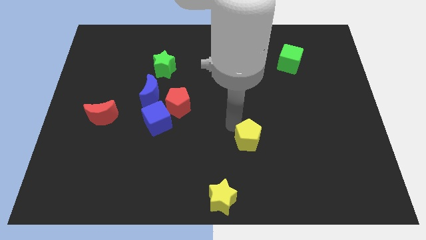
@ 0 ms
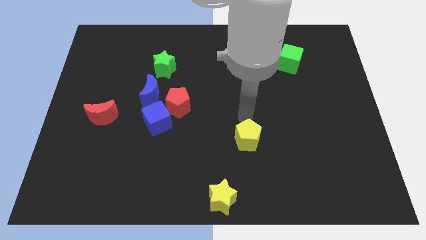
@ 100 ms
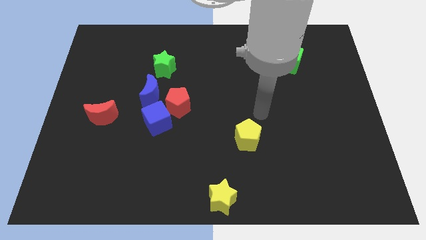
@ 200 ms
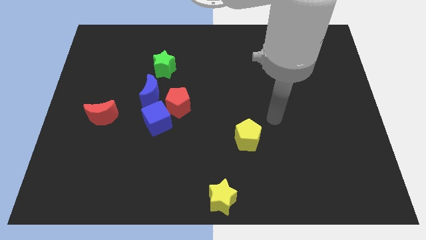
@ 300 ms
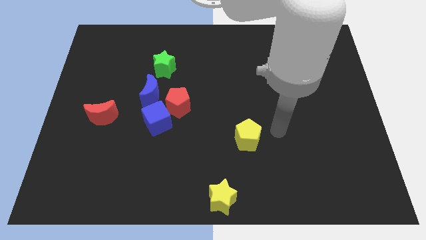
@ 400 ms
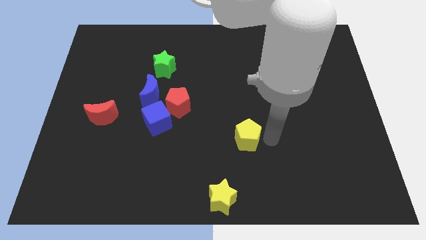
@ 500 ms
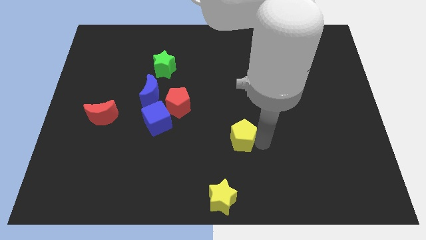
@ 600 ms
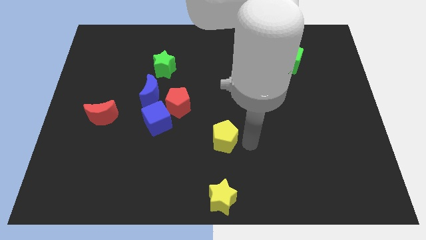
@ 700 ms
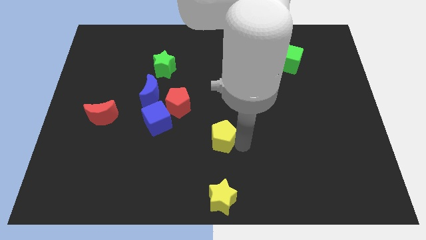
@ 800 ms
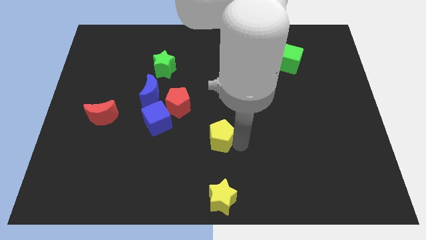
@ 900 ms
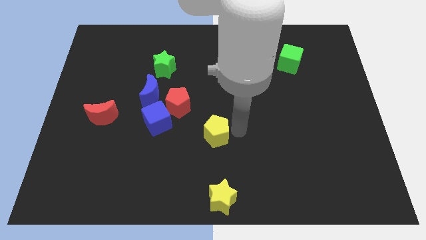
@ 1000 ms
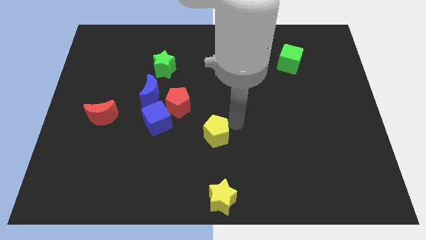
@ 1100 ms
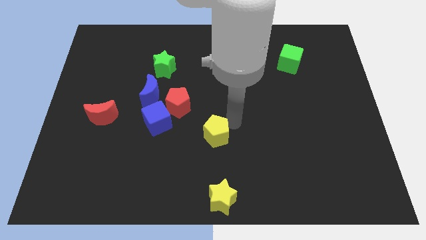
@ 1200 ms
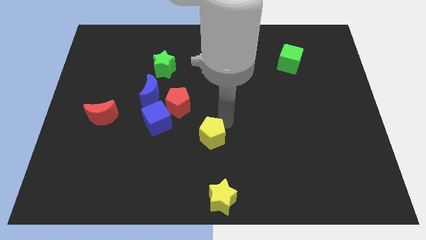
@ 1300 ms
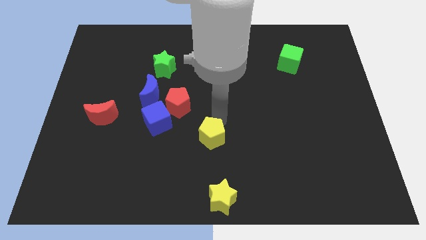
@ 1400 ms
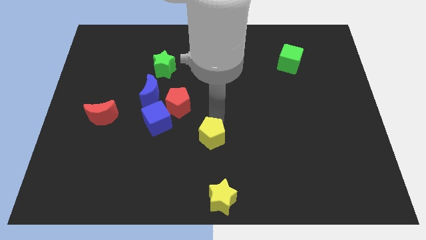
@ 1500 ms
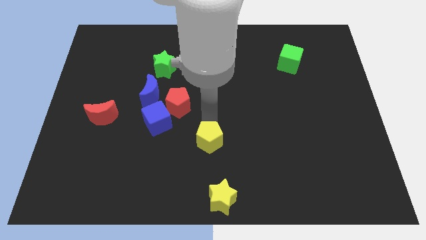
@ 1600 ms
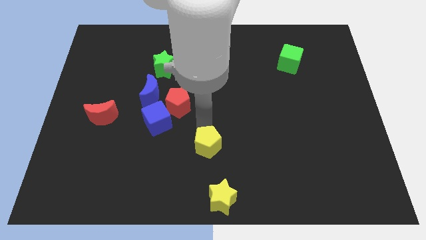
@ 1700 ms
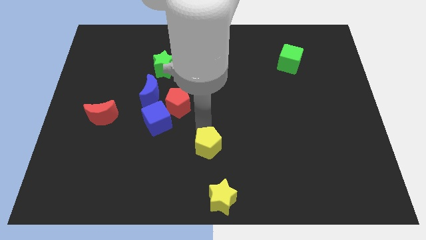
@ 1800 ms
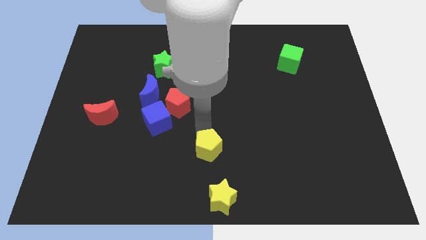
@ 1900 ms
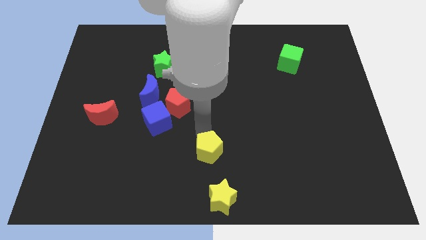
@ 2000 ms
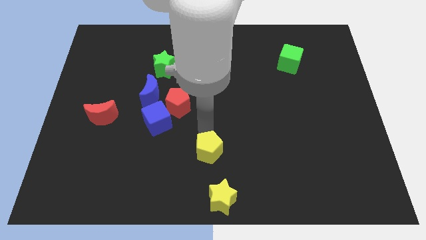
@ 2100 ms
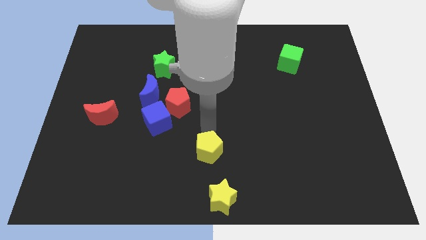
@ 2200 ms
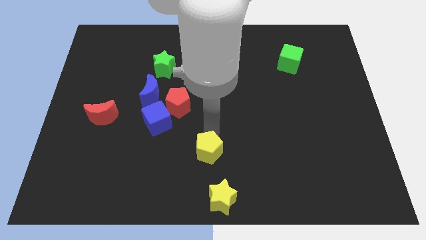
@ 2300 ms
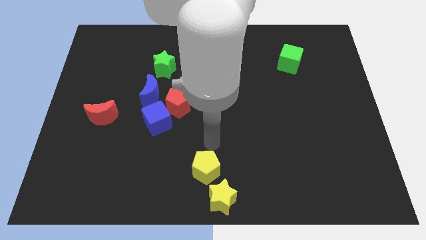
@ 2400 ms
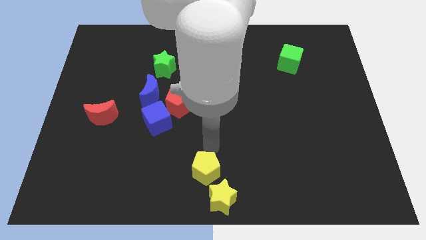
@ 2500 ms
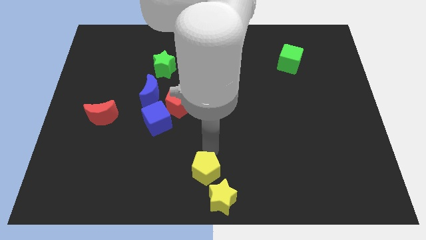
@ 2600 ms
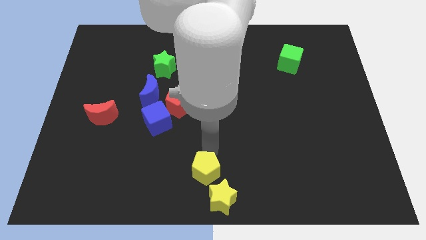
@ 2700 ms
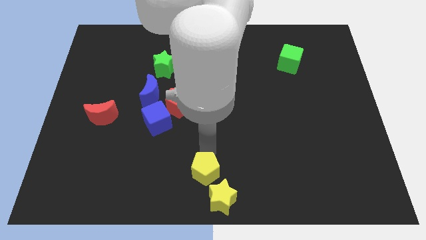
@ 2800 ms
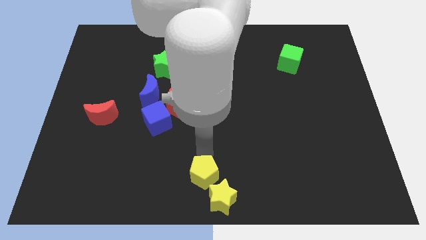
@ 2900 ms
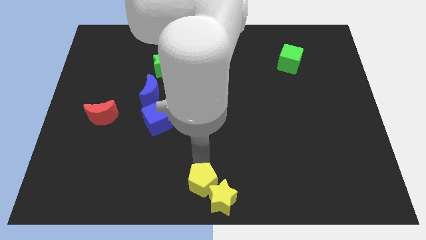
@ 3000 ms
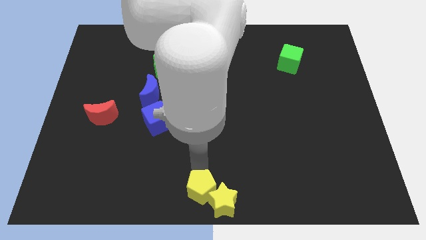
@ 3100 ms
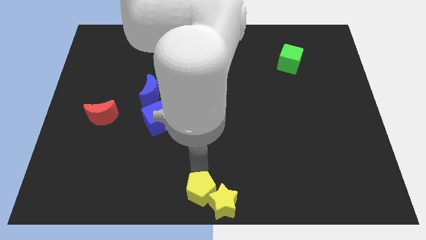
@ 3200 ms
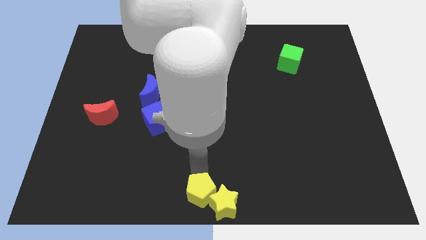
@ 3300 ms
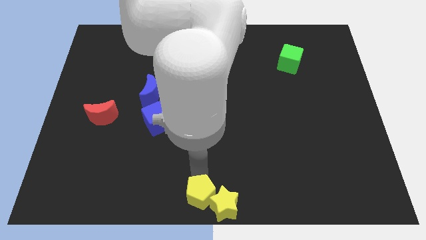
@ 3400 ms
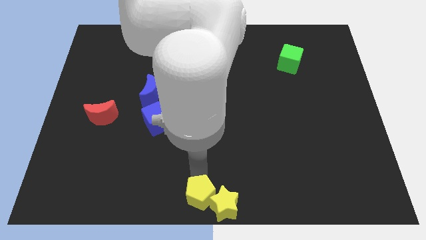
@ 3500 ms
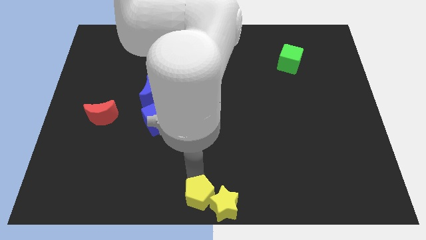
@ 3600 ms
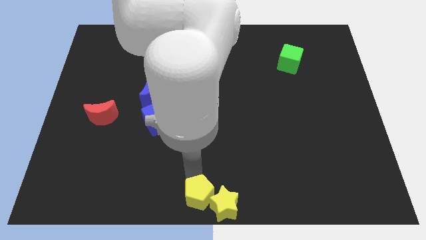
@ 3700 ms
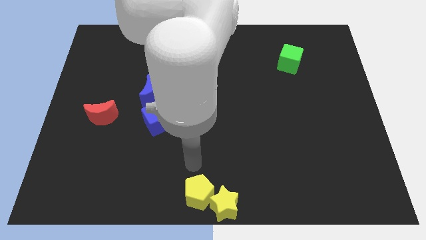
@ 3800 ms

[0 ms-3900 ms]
drag the yellow pentagon into the bottom center

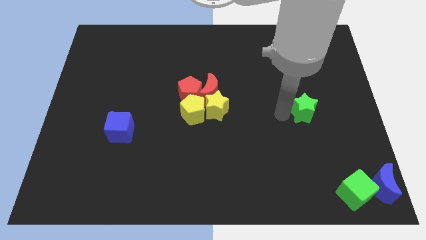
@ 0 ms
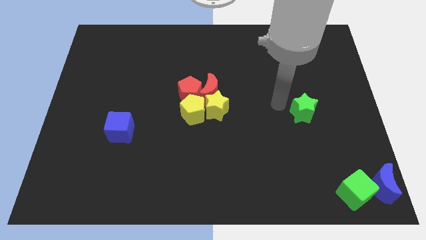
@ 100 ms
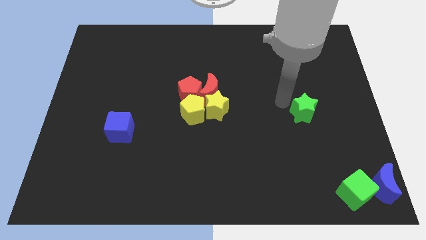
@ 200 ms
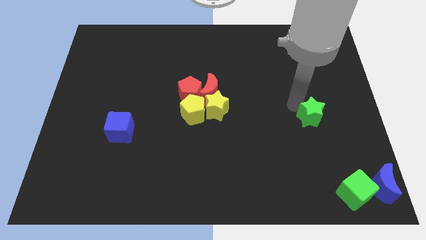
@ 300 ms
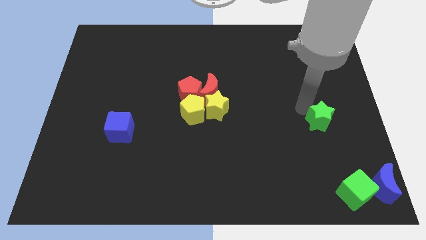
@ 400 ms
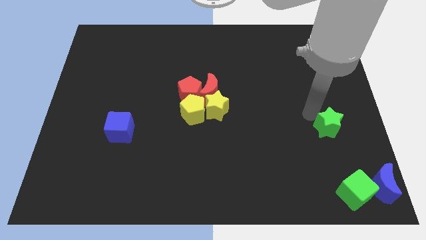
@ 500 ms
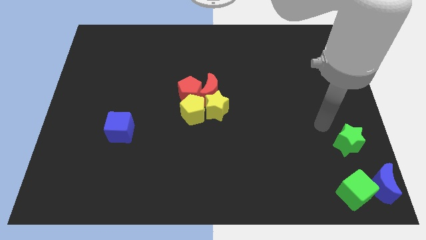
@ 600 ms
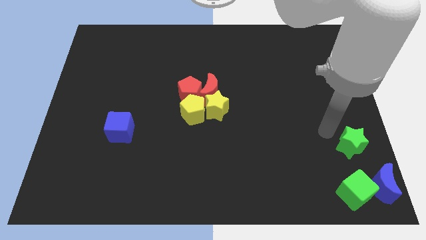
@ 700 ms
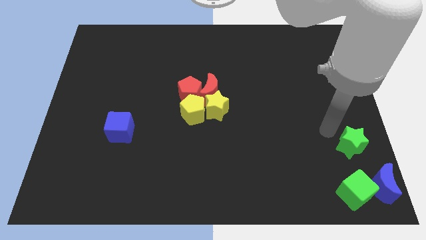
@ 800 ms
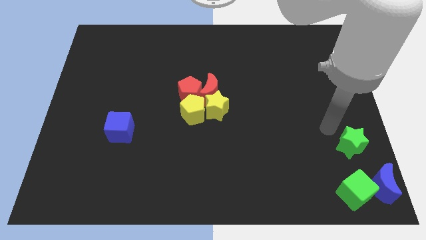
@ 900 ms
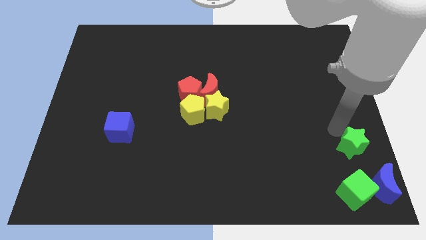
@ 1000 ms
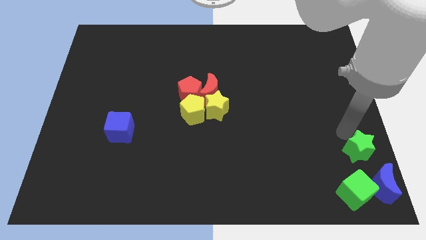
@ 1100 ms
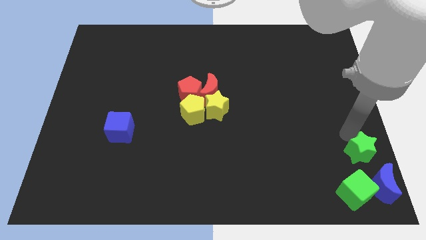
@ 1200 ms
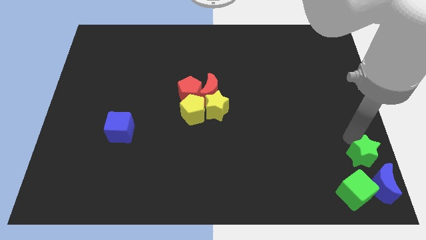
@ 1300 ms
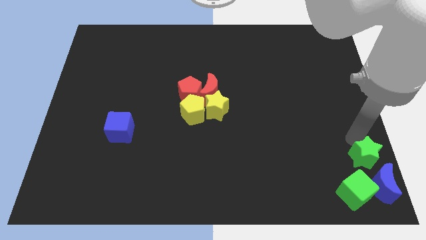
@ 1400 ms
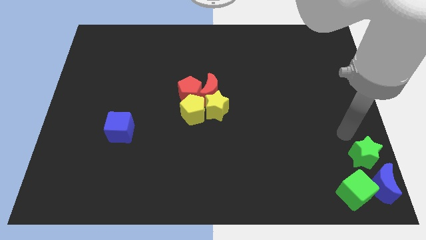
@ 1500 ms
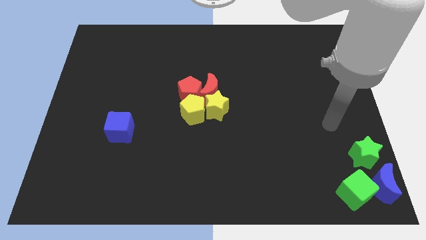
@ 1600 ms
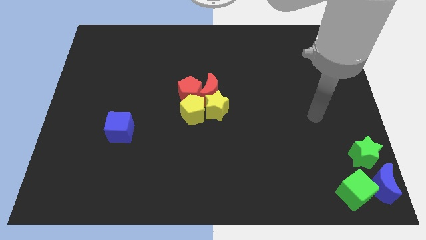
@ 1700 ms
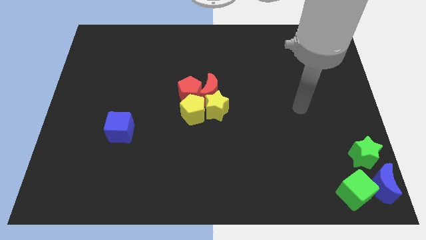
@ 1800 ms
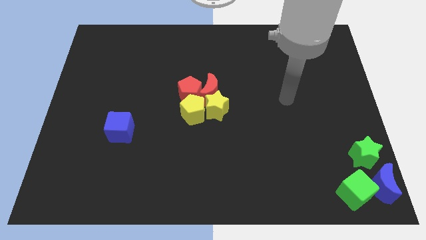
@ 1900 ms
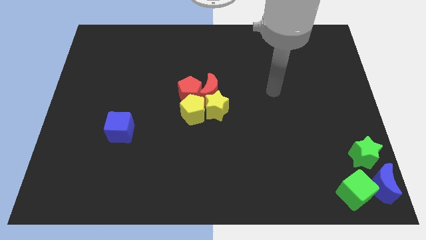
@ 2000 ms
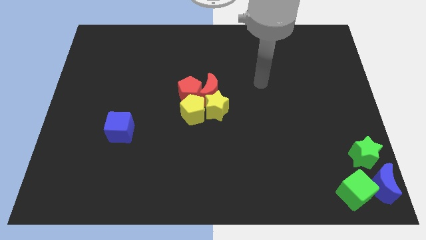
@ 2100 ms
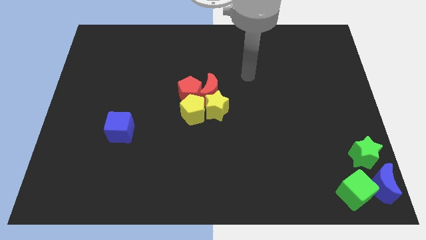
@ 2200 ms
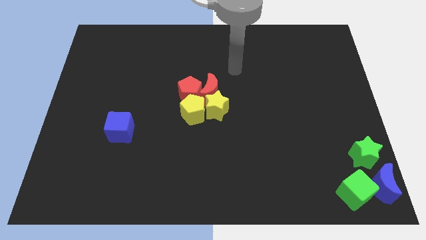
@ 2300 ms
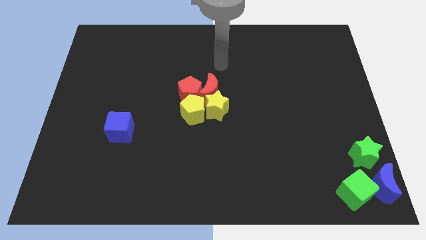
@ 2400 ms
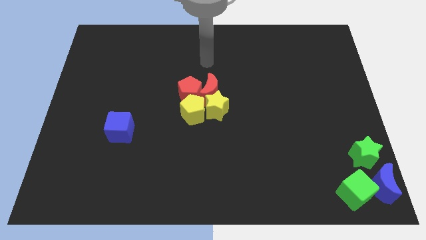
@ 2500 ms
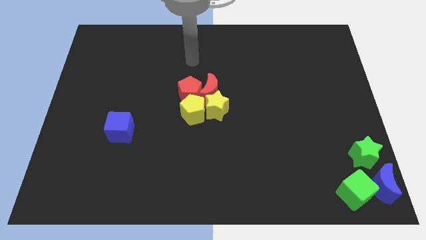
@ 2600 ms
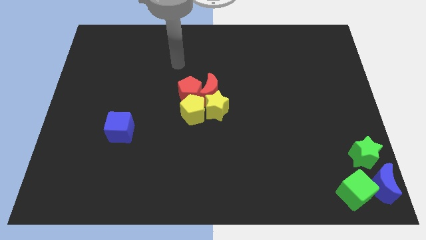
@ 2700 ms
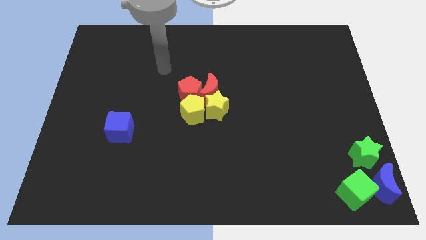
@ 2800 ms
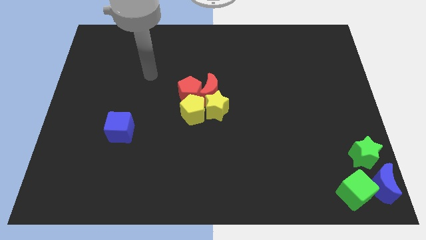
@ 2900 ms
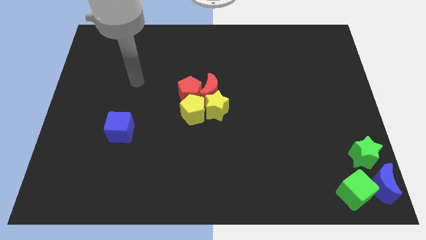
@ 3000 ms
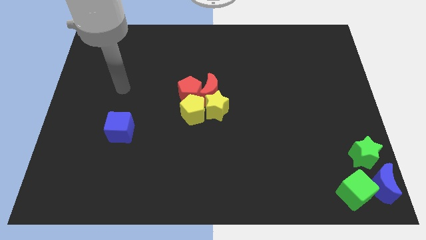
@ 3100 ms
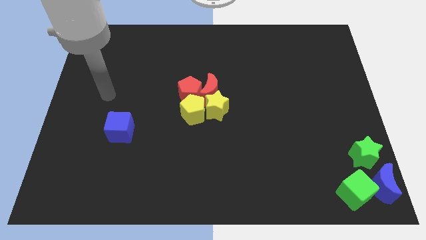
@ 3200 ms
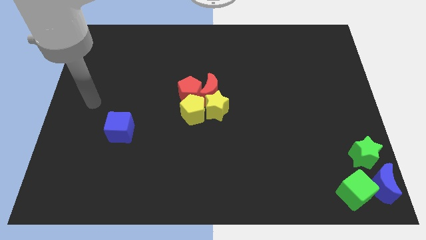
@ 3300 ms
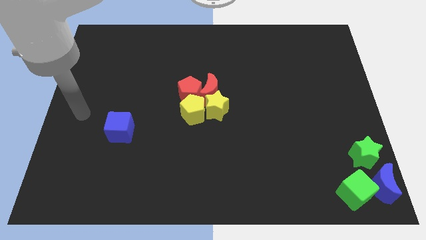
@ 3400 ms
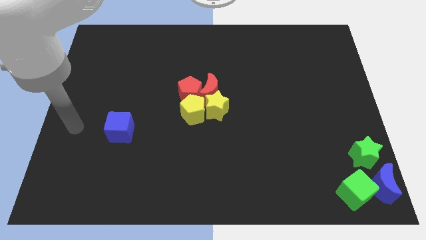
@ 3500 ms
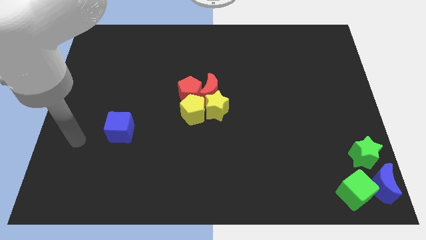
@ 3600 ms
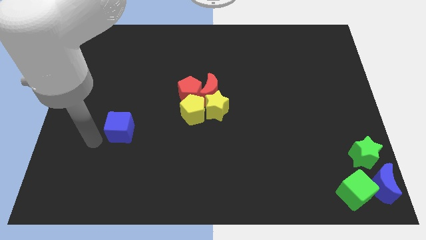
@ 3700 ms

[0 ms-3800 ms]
place the green star above the blue crescent

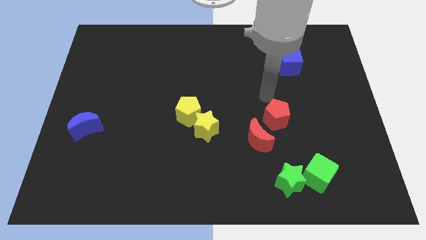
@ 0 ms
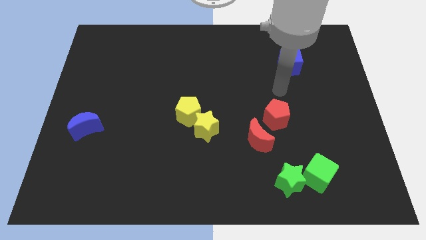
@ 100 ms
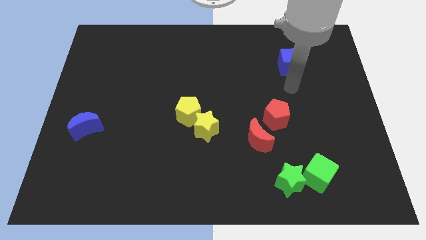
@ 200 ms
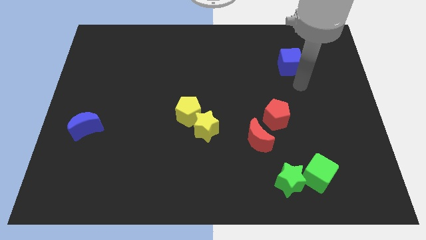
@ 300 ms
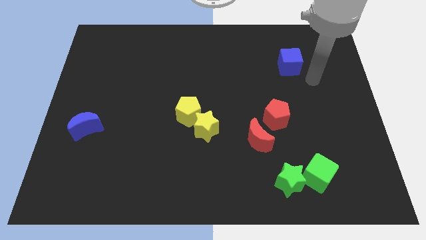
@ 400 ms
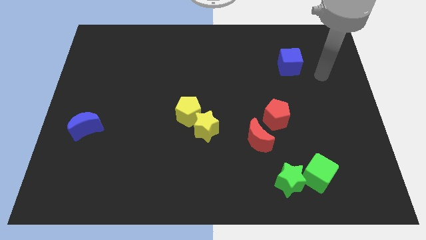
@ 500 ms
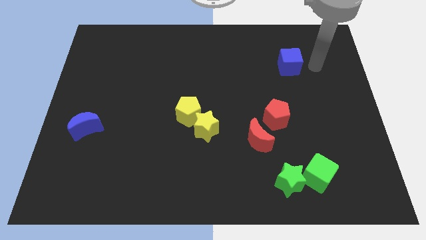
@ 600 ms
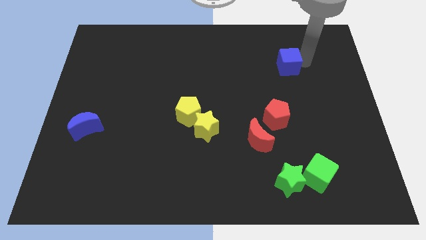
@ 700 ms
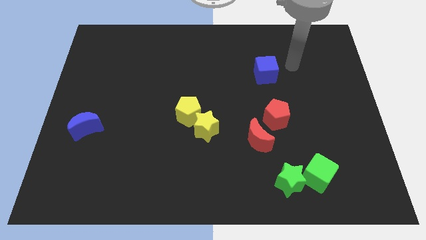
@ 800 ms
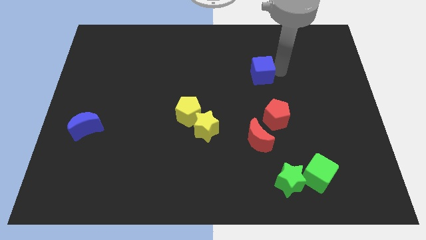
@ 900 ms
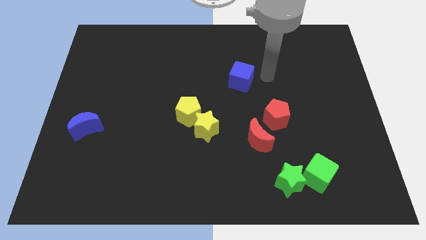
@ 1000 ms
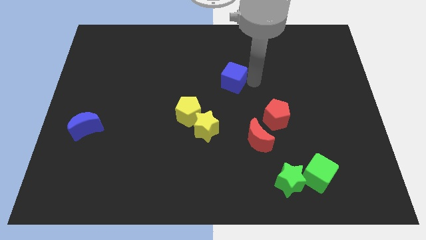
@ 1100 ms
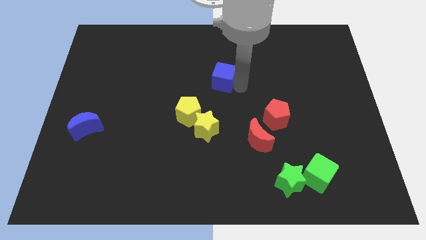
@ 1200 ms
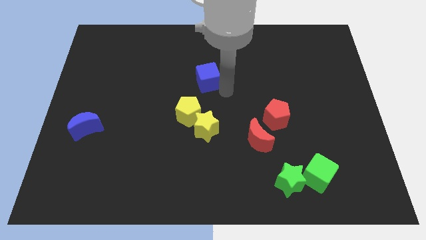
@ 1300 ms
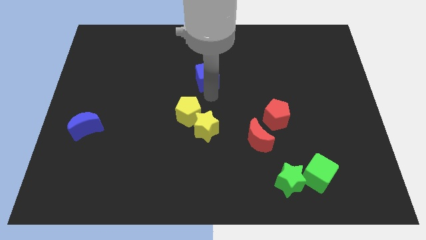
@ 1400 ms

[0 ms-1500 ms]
push the blue cube towards yellow pentagon
